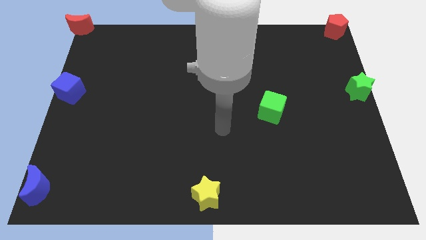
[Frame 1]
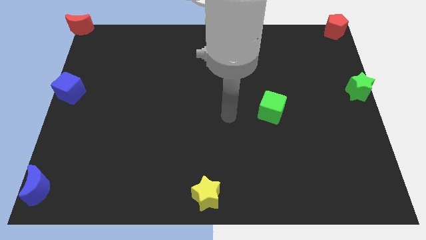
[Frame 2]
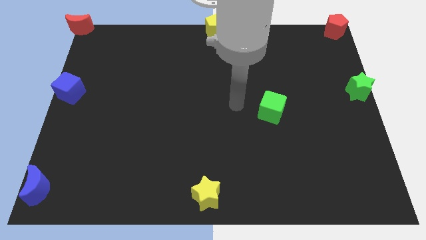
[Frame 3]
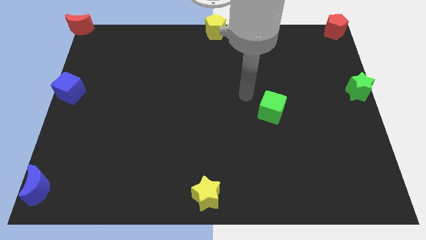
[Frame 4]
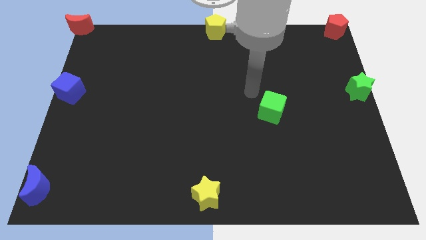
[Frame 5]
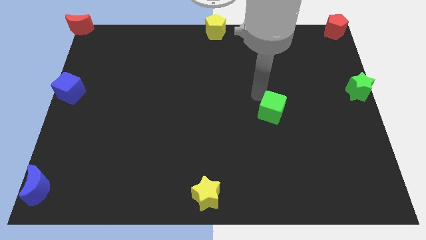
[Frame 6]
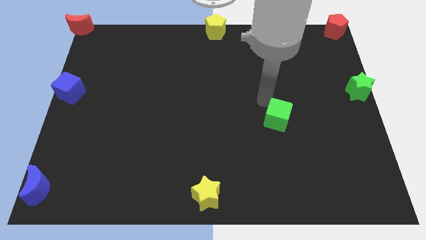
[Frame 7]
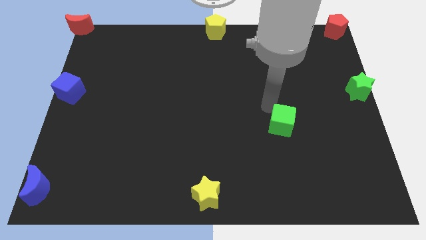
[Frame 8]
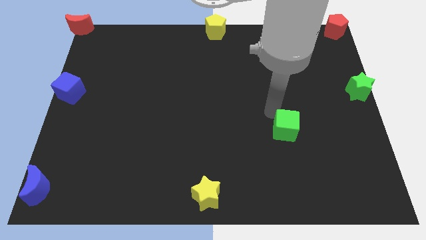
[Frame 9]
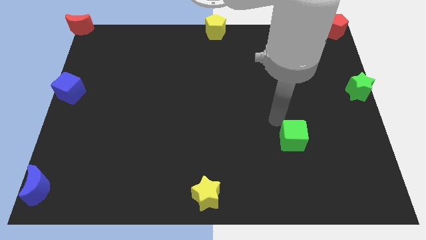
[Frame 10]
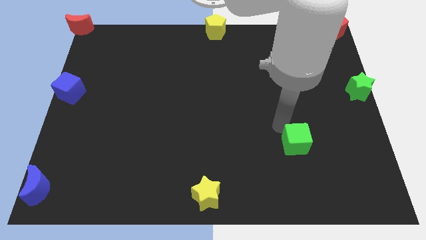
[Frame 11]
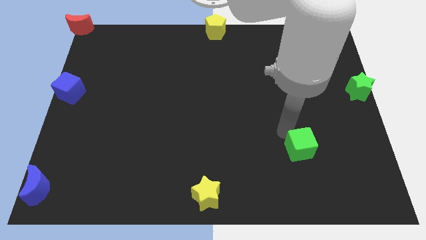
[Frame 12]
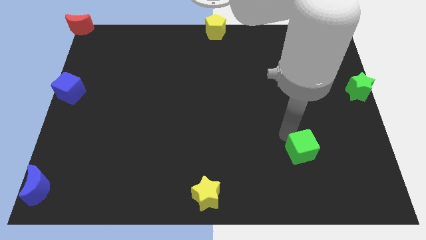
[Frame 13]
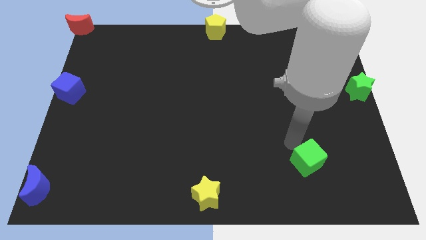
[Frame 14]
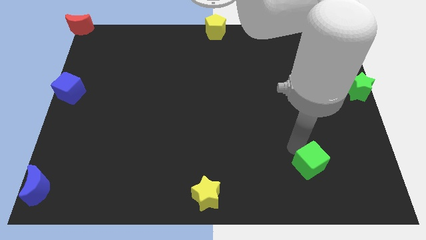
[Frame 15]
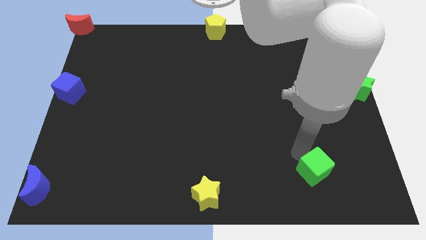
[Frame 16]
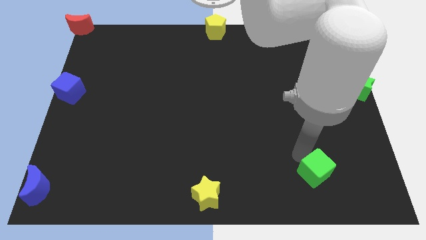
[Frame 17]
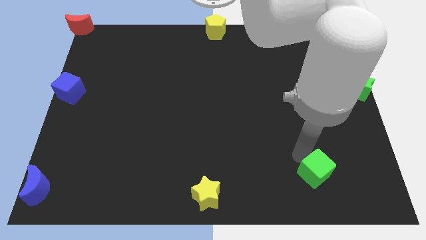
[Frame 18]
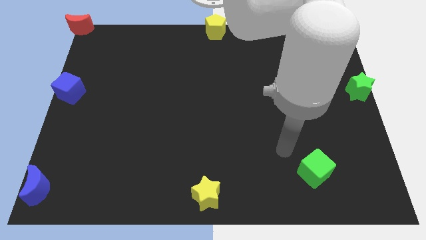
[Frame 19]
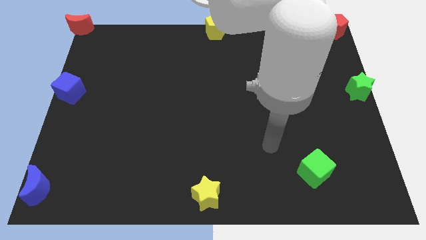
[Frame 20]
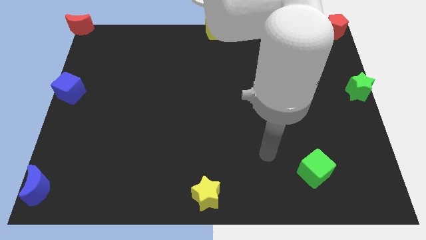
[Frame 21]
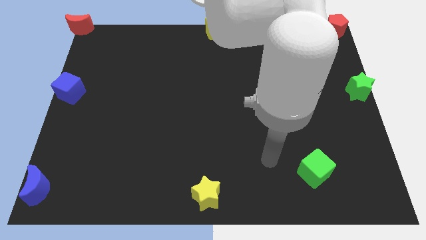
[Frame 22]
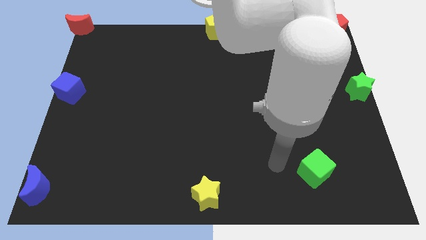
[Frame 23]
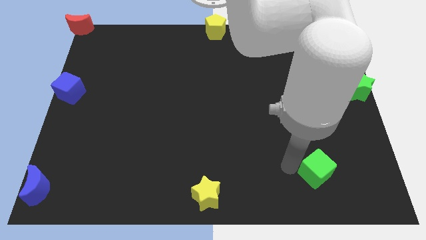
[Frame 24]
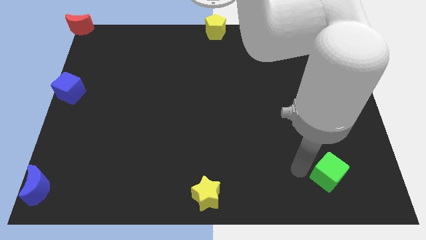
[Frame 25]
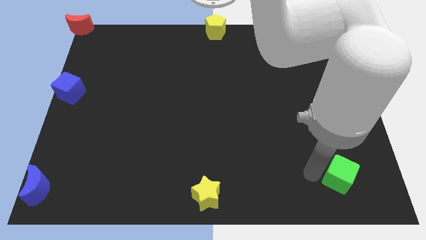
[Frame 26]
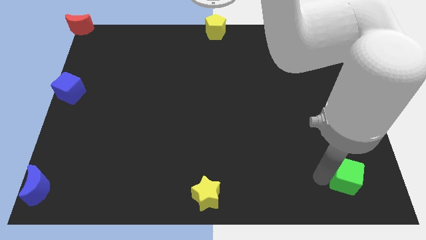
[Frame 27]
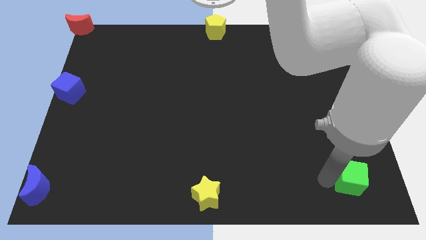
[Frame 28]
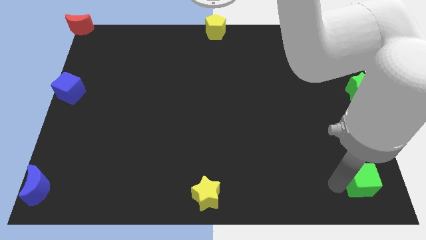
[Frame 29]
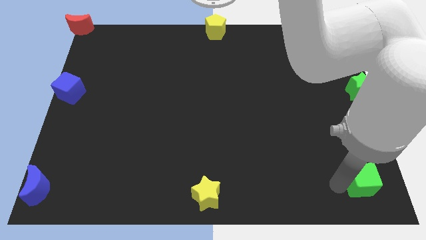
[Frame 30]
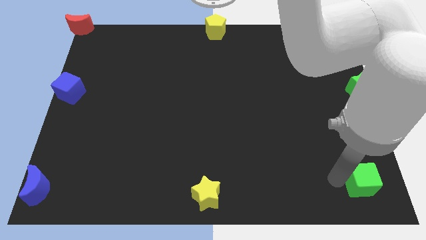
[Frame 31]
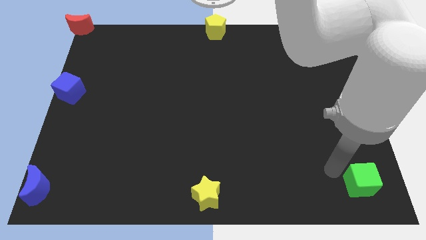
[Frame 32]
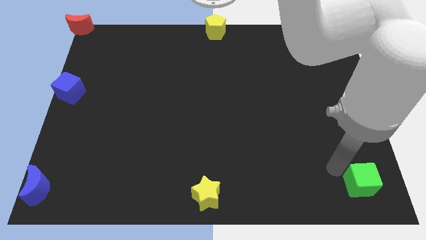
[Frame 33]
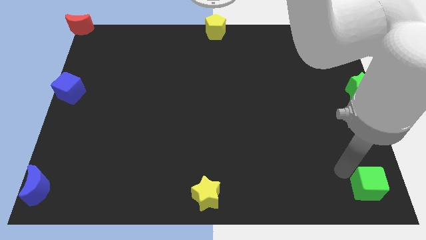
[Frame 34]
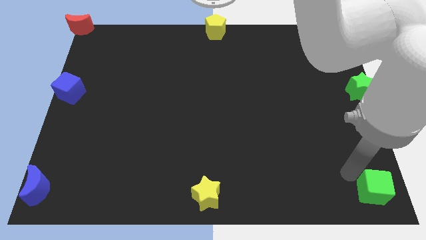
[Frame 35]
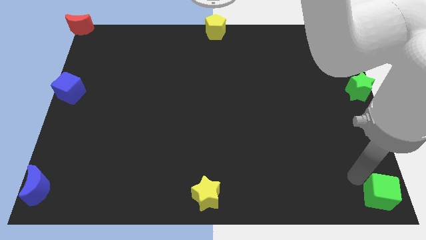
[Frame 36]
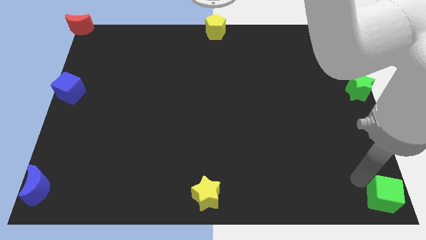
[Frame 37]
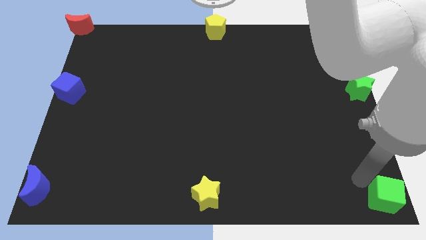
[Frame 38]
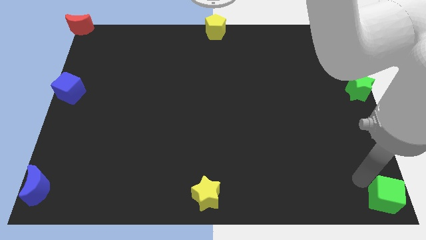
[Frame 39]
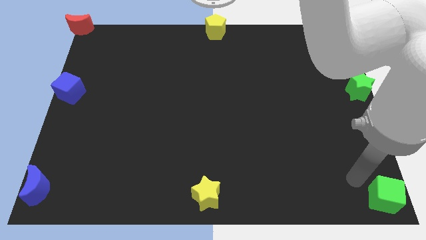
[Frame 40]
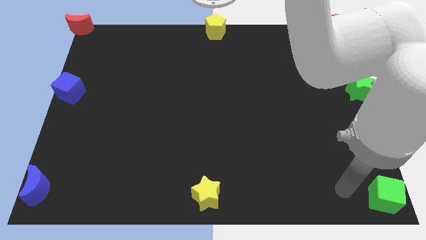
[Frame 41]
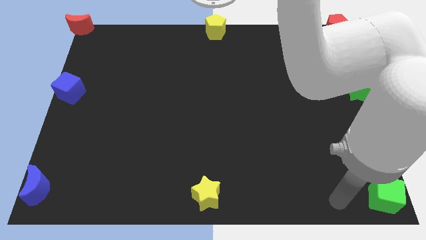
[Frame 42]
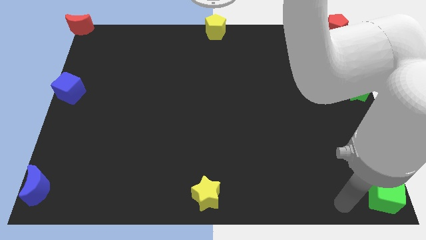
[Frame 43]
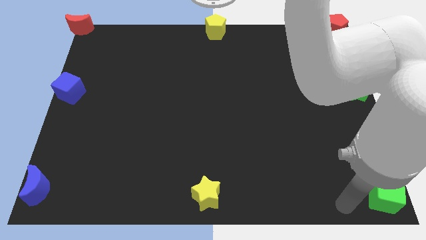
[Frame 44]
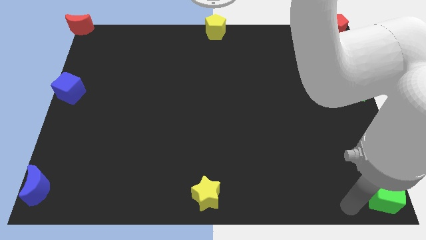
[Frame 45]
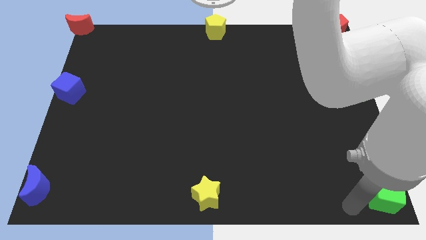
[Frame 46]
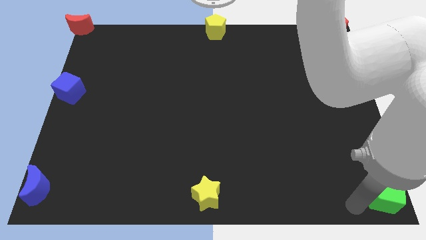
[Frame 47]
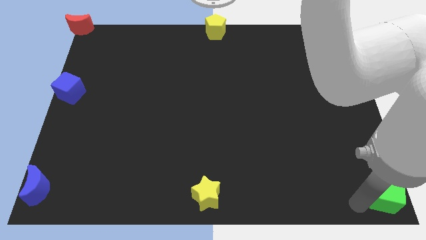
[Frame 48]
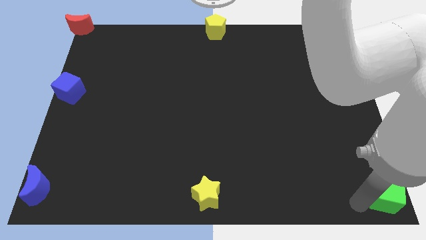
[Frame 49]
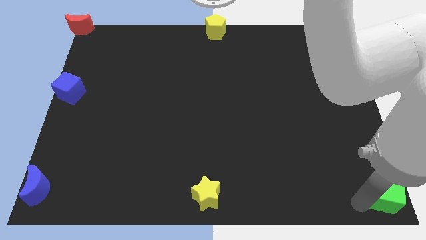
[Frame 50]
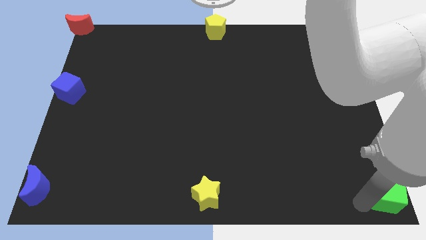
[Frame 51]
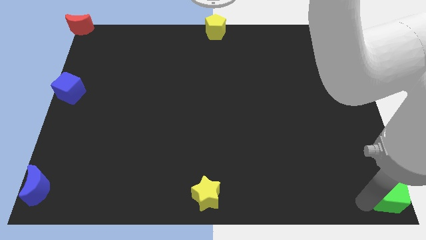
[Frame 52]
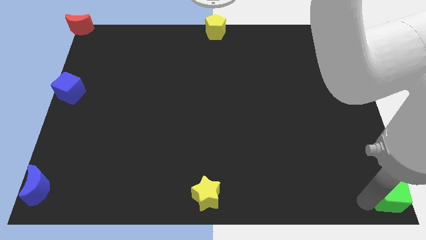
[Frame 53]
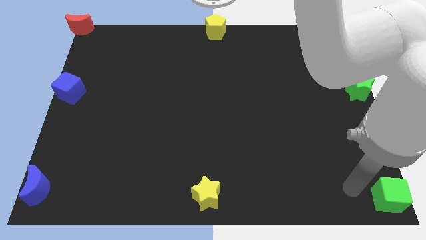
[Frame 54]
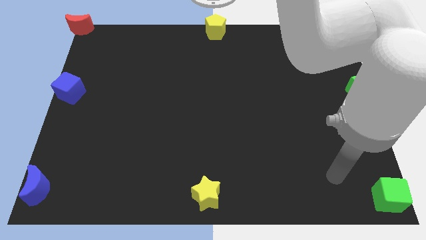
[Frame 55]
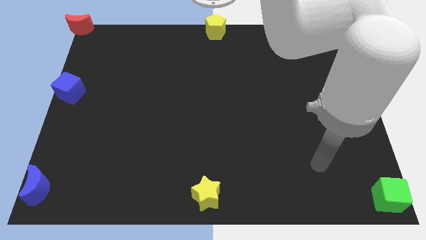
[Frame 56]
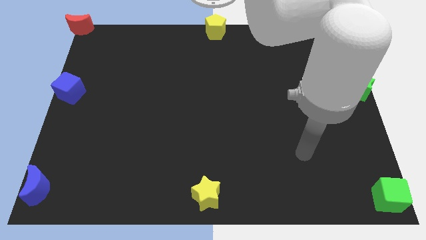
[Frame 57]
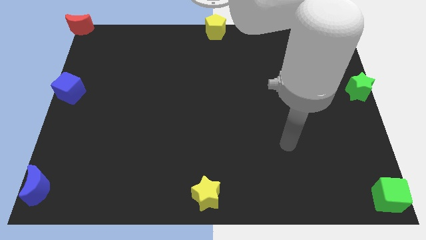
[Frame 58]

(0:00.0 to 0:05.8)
push green cube to the bottom right corner of the board

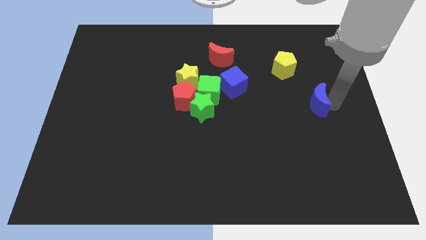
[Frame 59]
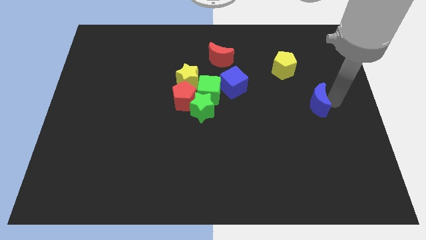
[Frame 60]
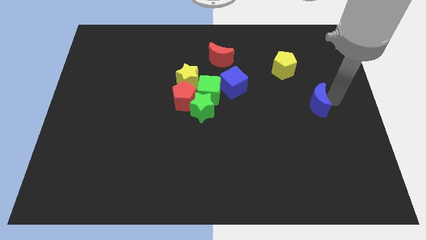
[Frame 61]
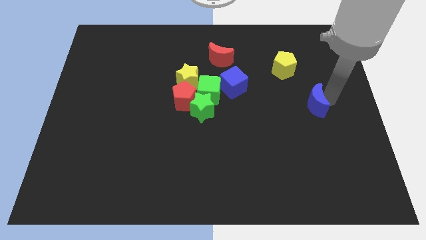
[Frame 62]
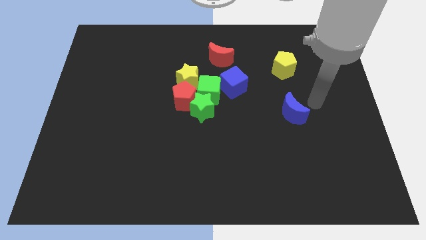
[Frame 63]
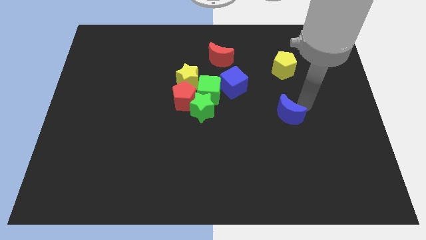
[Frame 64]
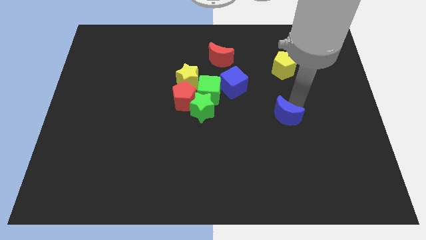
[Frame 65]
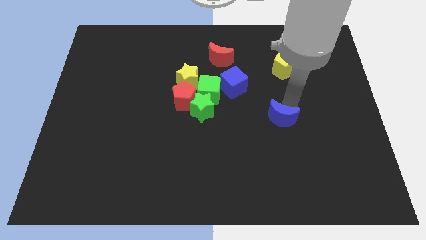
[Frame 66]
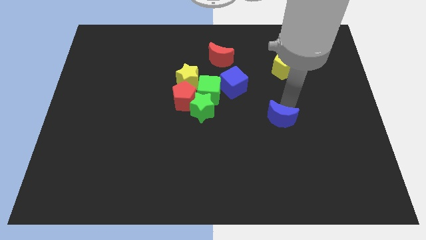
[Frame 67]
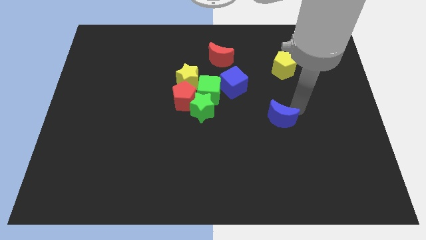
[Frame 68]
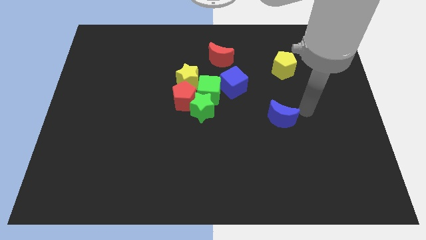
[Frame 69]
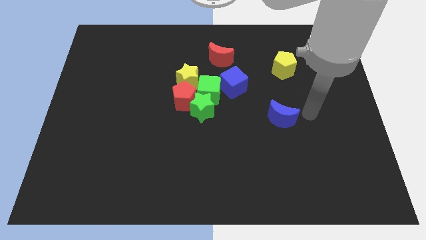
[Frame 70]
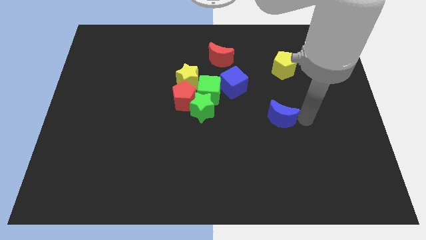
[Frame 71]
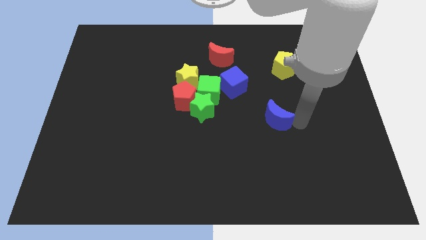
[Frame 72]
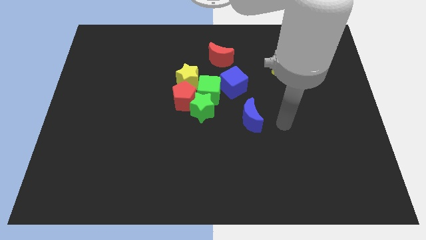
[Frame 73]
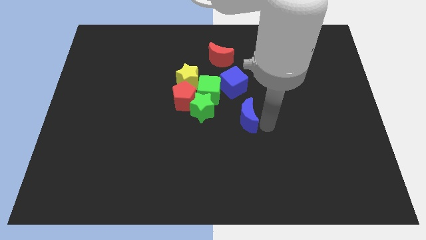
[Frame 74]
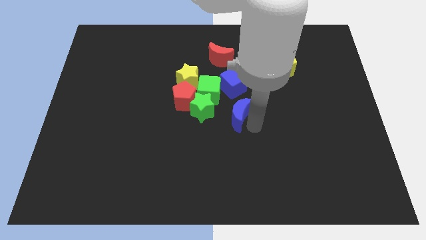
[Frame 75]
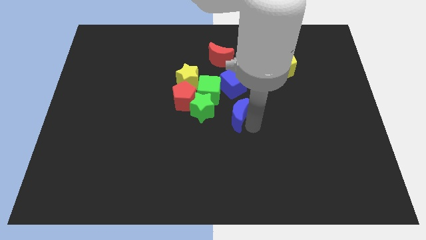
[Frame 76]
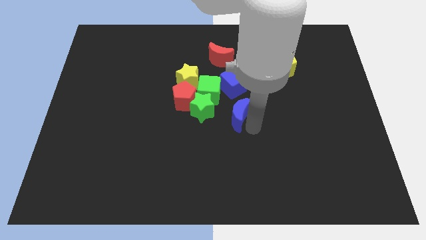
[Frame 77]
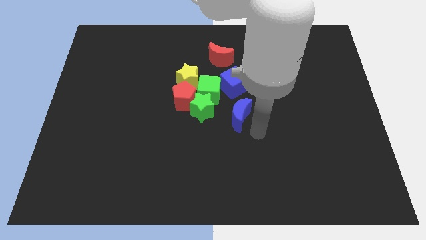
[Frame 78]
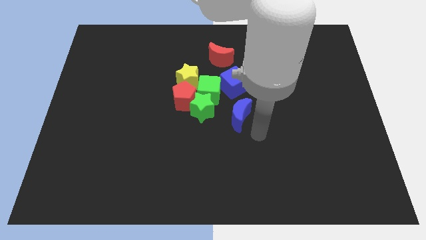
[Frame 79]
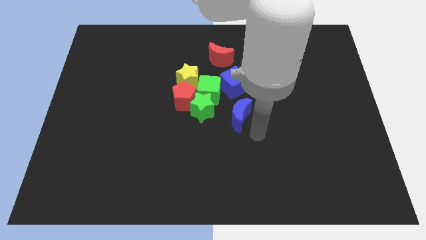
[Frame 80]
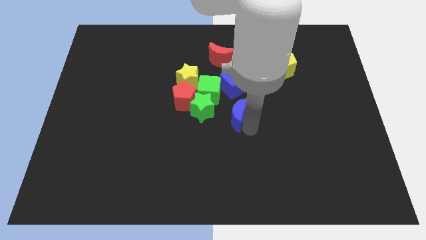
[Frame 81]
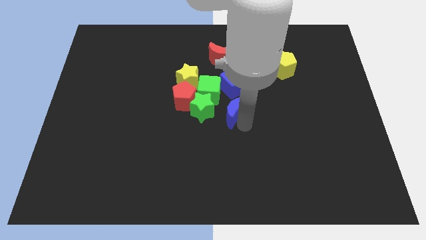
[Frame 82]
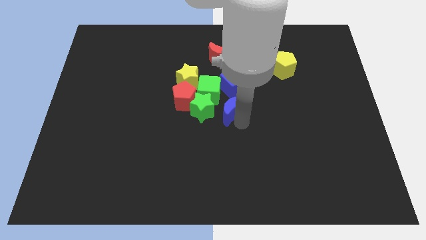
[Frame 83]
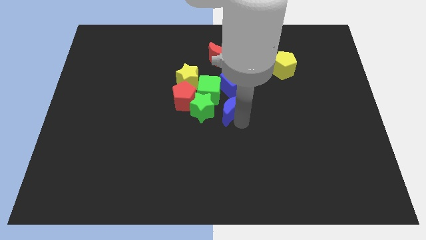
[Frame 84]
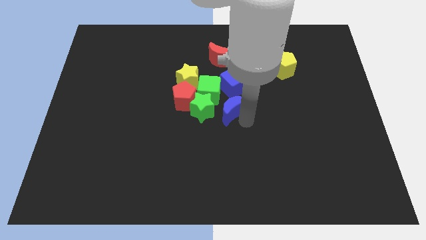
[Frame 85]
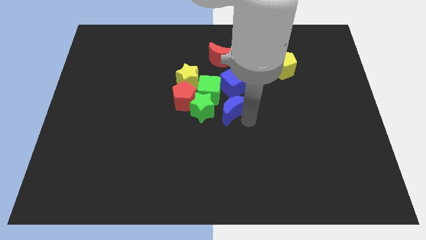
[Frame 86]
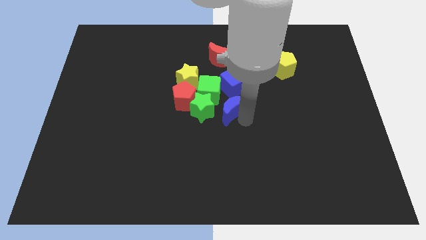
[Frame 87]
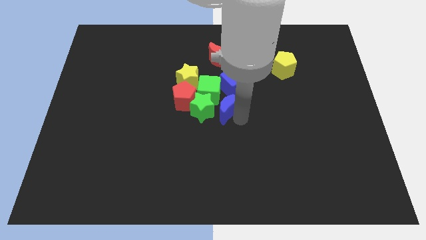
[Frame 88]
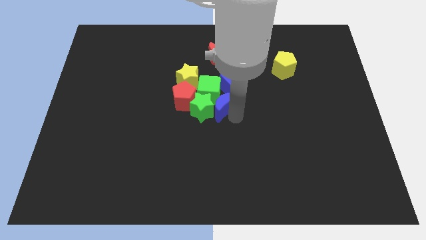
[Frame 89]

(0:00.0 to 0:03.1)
place the blue crescent to the right of the green star
